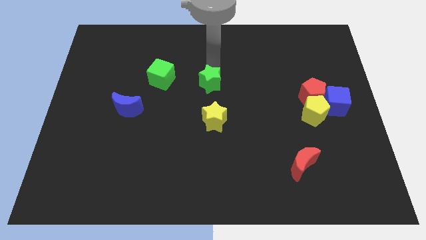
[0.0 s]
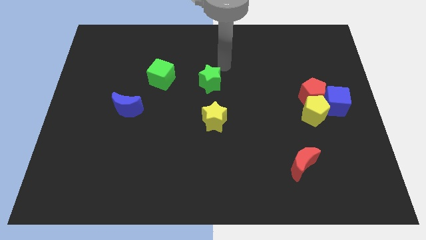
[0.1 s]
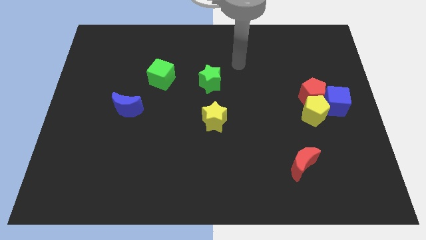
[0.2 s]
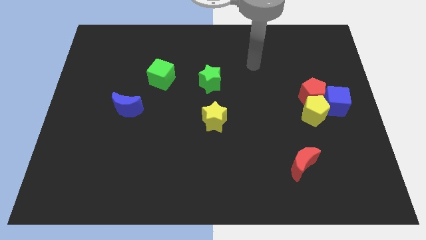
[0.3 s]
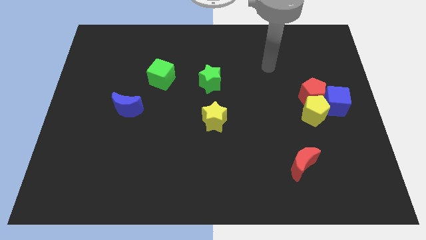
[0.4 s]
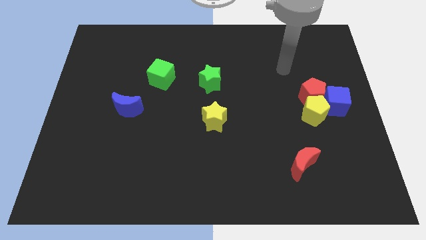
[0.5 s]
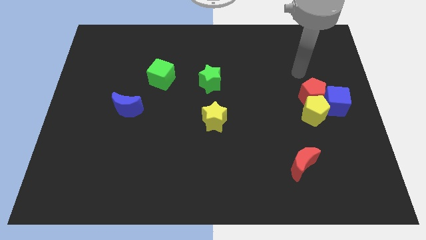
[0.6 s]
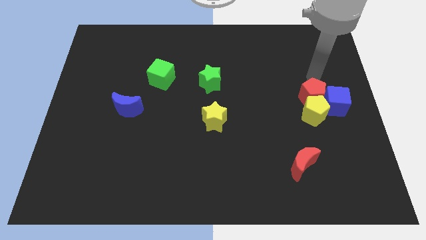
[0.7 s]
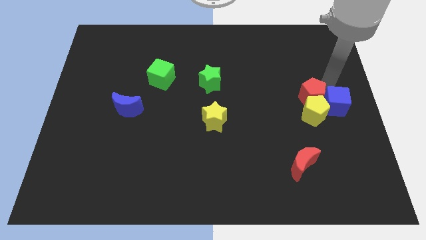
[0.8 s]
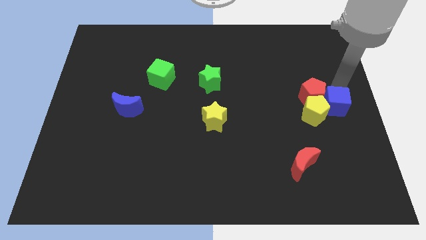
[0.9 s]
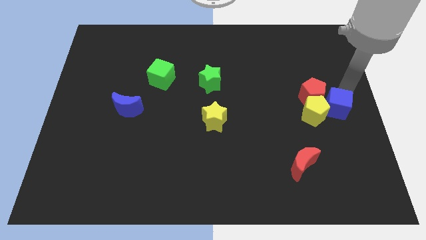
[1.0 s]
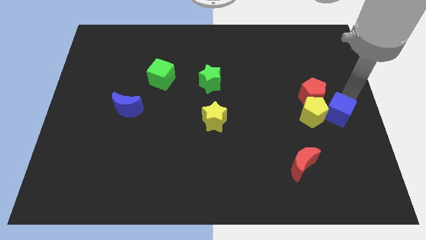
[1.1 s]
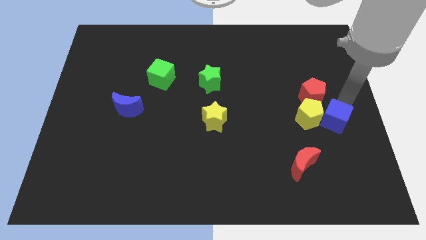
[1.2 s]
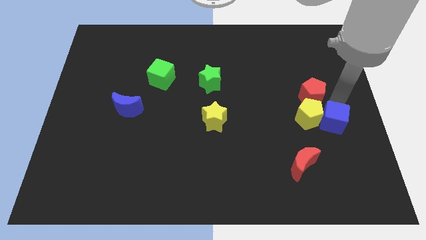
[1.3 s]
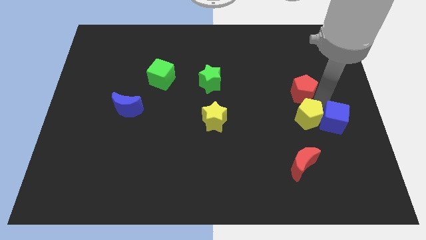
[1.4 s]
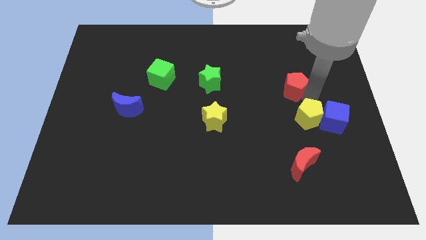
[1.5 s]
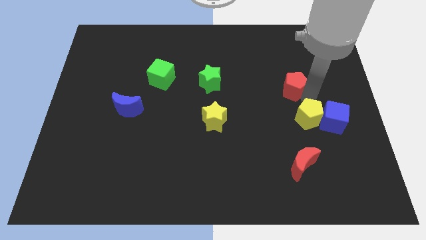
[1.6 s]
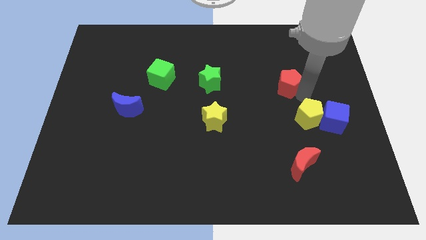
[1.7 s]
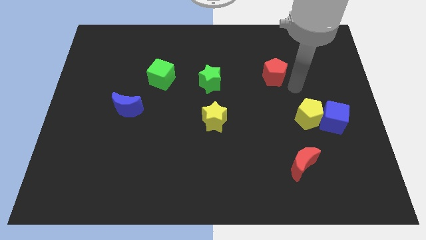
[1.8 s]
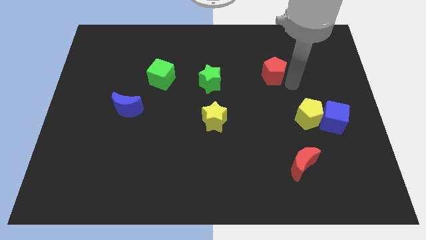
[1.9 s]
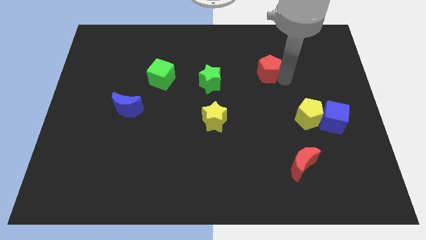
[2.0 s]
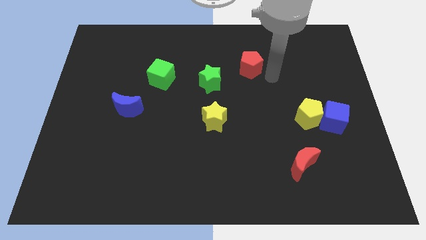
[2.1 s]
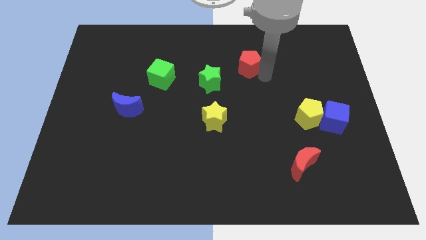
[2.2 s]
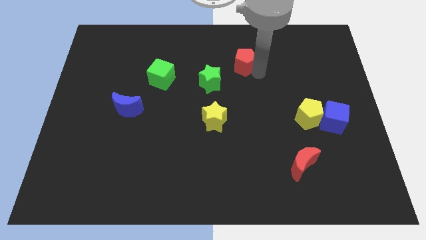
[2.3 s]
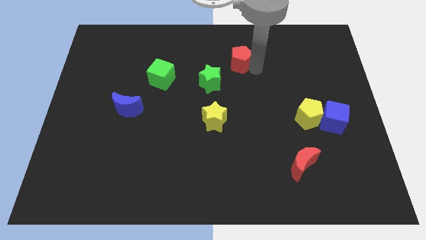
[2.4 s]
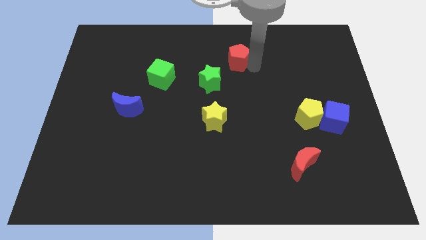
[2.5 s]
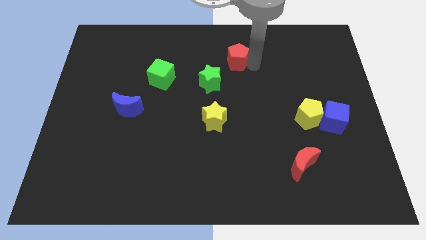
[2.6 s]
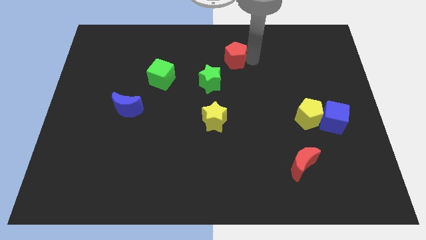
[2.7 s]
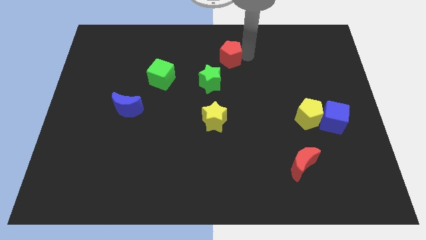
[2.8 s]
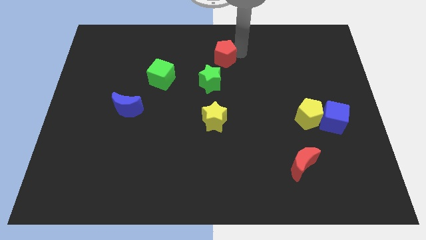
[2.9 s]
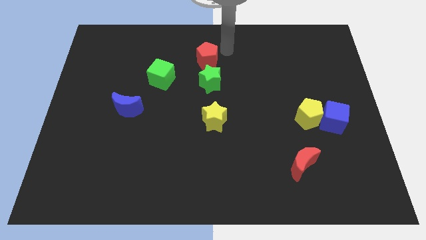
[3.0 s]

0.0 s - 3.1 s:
place red pentagon above green star

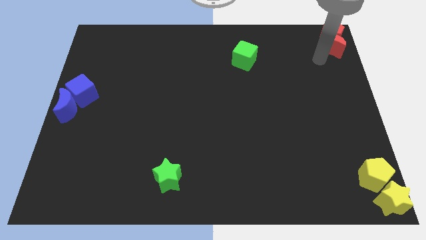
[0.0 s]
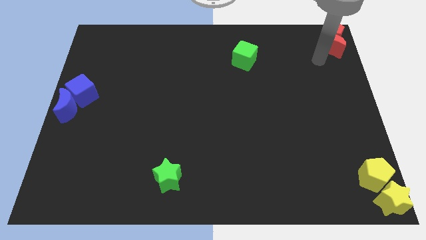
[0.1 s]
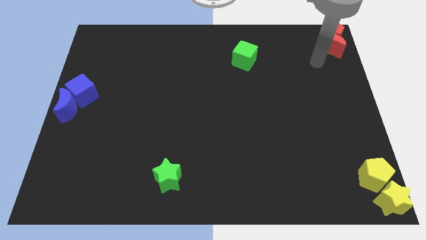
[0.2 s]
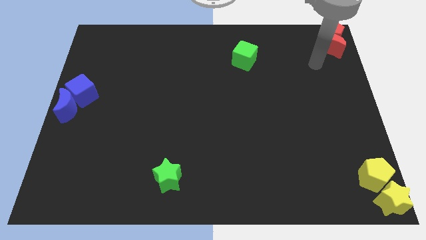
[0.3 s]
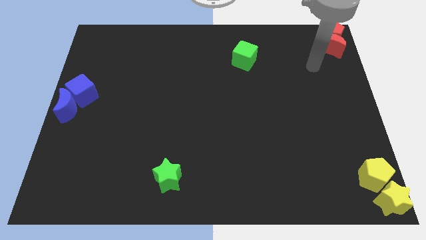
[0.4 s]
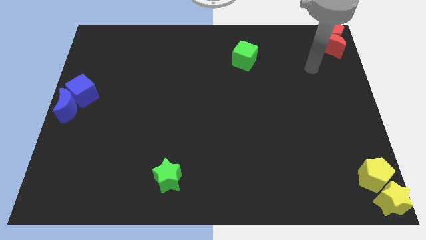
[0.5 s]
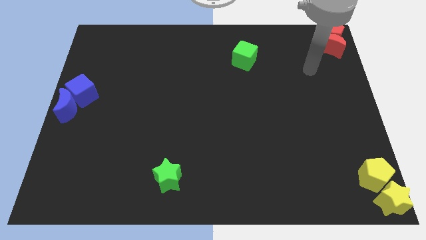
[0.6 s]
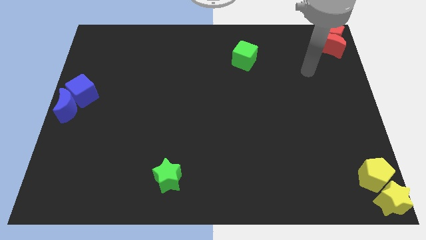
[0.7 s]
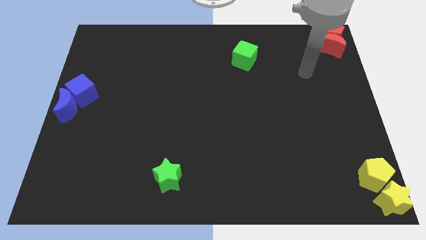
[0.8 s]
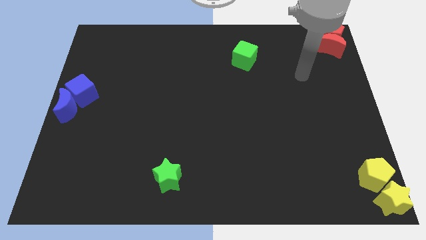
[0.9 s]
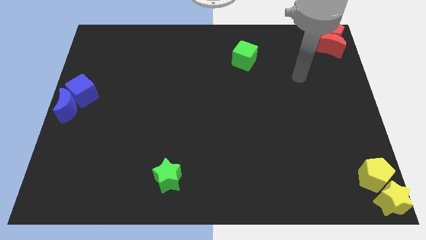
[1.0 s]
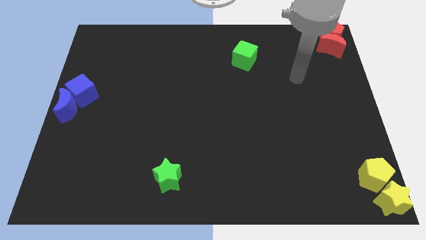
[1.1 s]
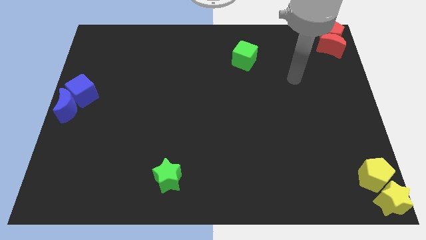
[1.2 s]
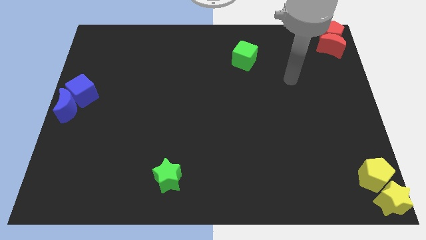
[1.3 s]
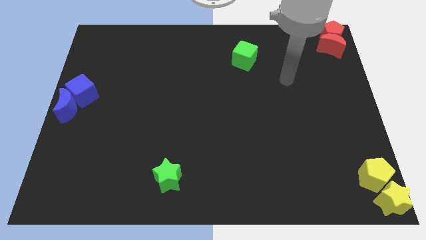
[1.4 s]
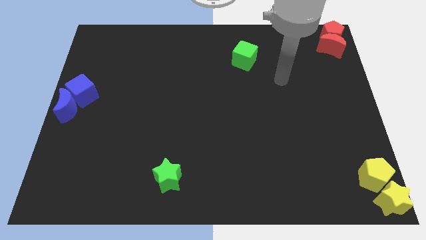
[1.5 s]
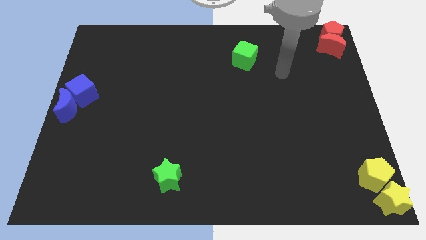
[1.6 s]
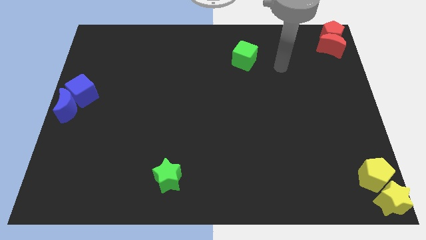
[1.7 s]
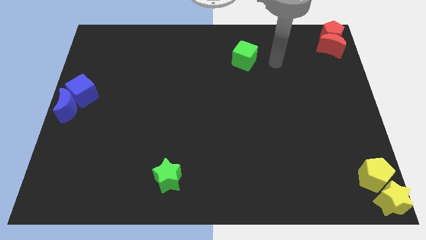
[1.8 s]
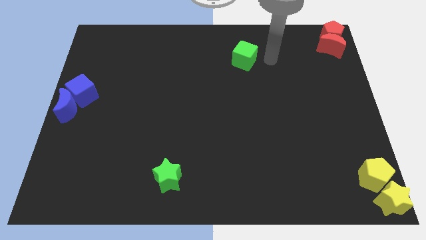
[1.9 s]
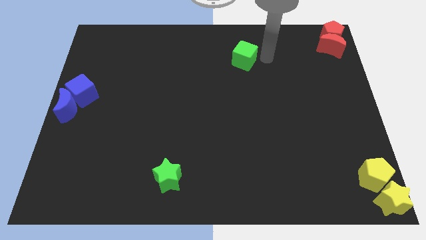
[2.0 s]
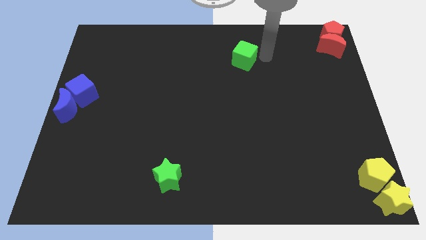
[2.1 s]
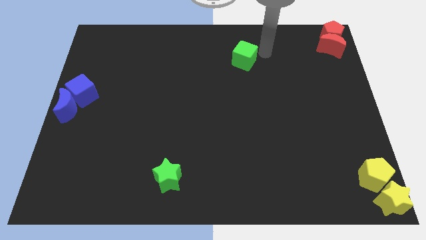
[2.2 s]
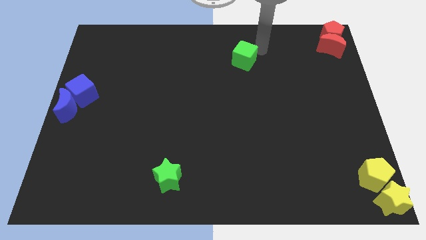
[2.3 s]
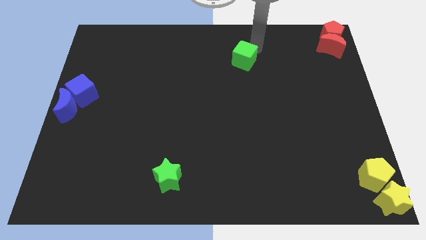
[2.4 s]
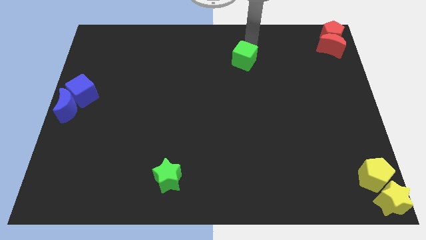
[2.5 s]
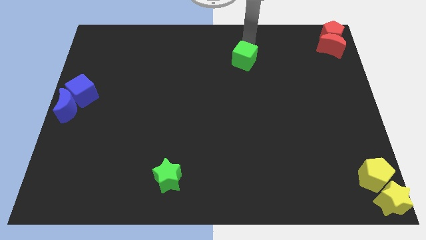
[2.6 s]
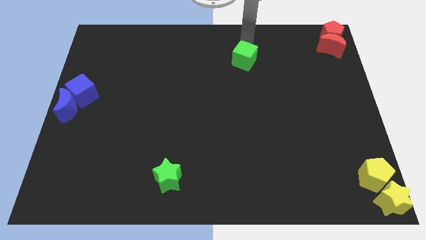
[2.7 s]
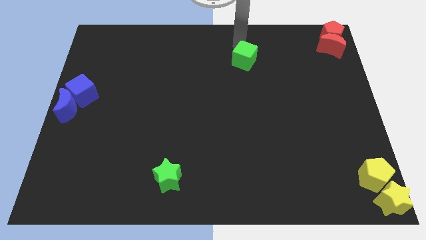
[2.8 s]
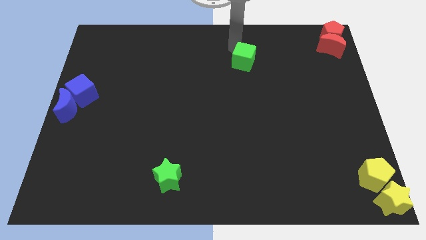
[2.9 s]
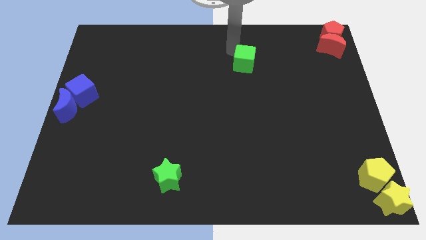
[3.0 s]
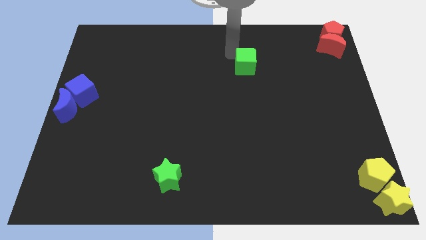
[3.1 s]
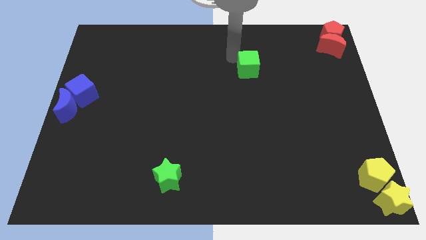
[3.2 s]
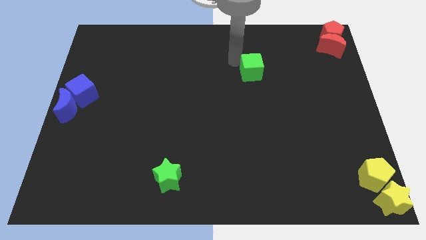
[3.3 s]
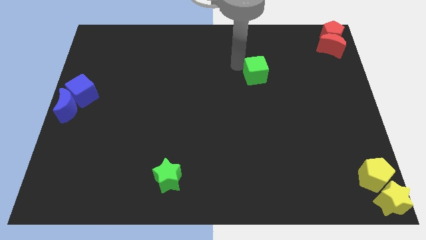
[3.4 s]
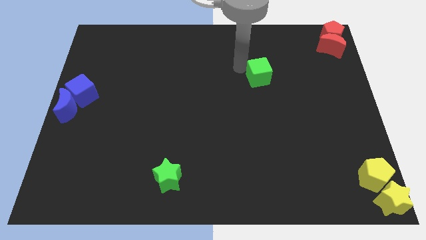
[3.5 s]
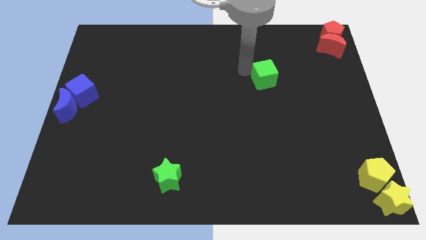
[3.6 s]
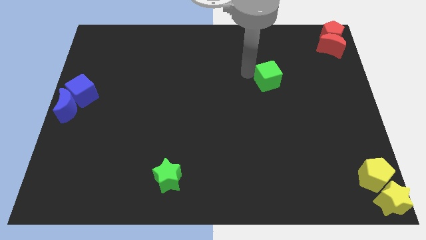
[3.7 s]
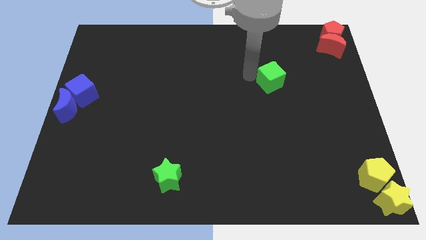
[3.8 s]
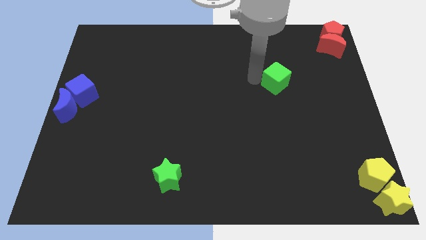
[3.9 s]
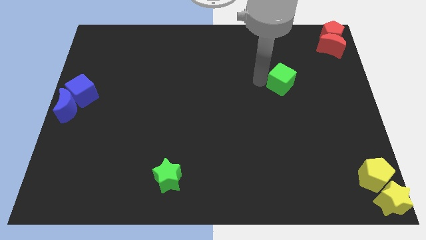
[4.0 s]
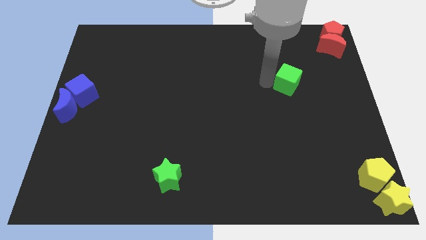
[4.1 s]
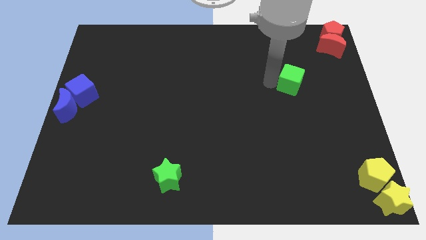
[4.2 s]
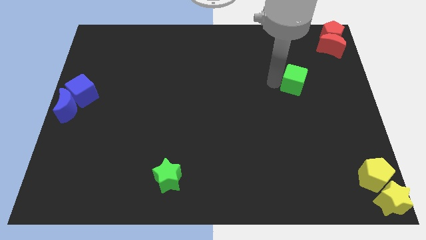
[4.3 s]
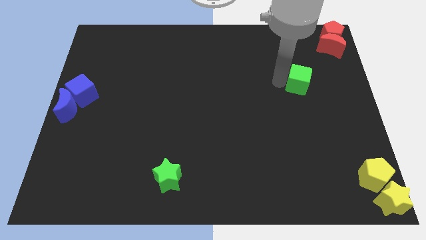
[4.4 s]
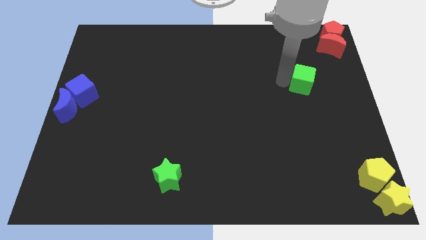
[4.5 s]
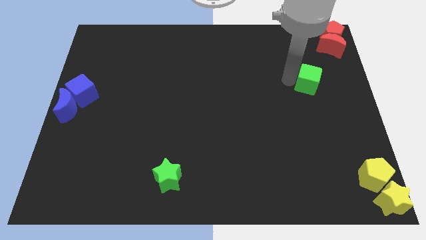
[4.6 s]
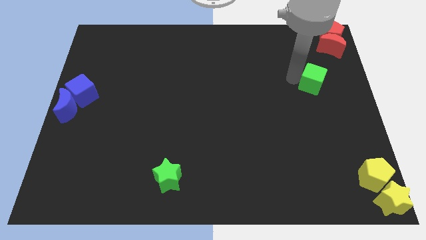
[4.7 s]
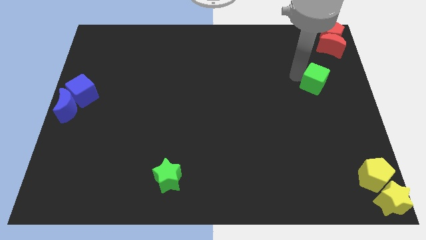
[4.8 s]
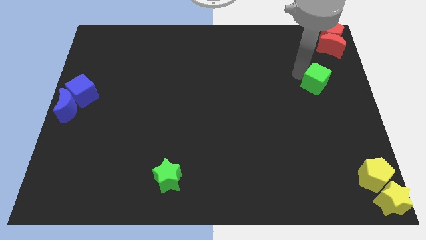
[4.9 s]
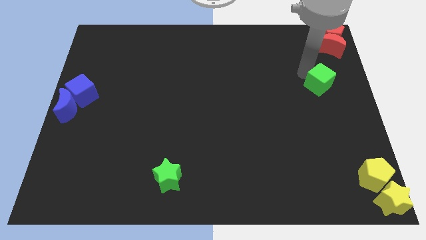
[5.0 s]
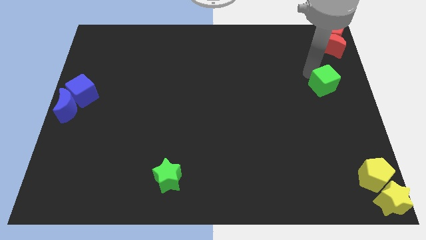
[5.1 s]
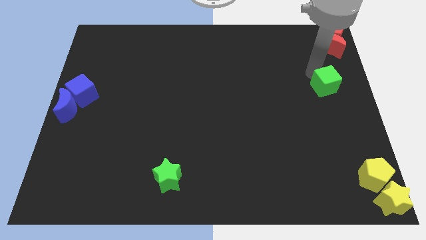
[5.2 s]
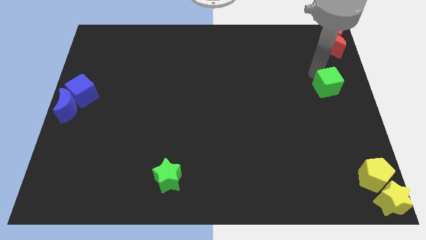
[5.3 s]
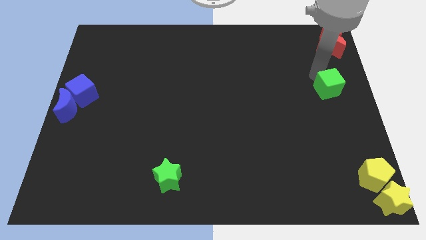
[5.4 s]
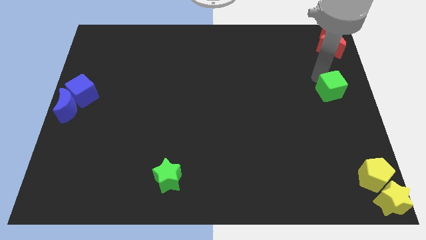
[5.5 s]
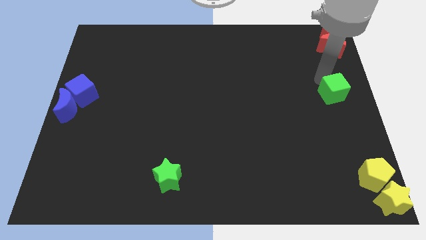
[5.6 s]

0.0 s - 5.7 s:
move the green cube towards the right side of the board

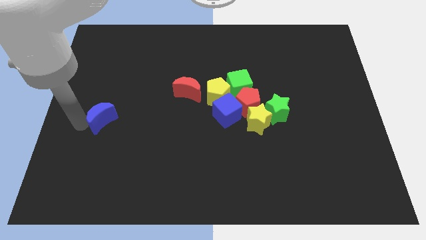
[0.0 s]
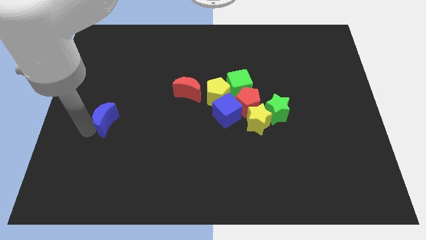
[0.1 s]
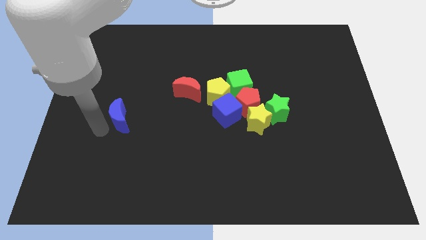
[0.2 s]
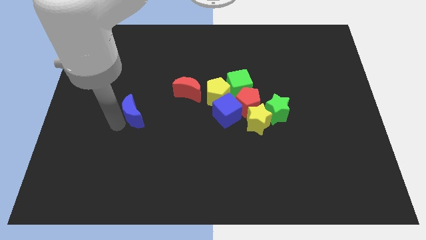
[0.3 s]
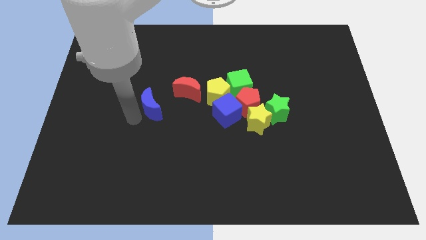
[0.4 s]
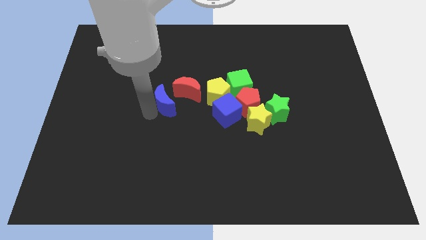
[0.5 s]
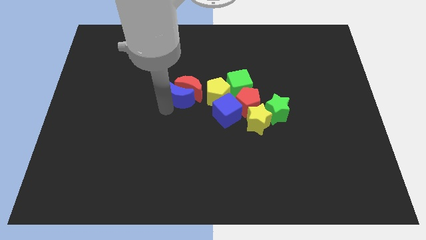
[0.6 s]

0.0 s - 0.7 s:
place the blue crescent to the left of the red crescent
